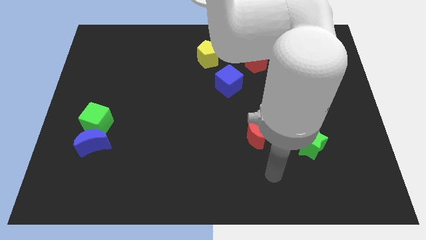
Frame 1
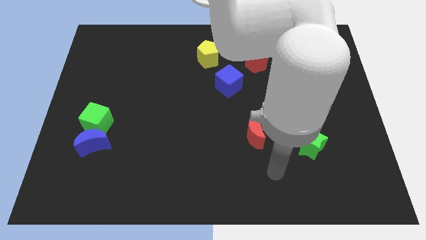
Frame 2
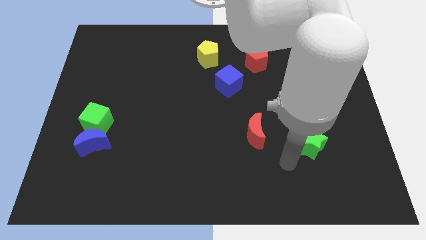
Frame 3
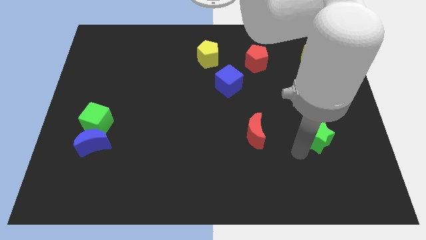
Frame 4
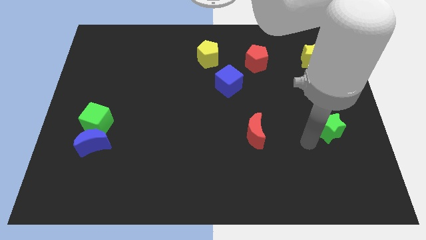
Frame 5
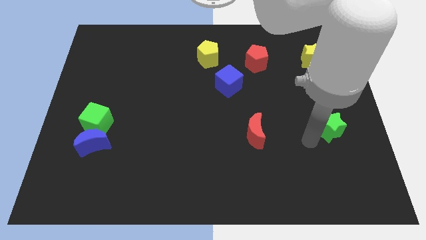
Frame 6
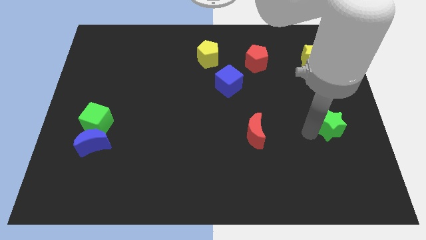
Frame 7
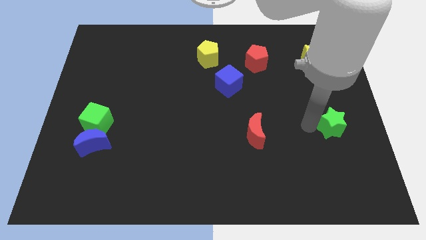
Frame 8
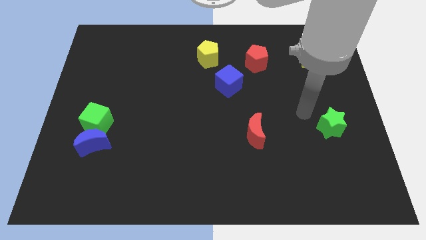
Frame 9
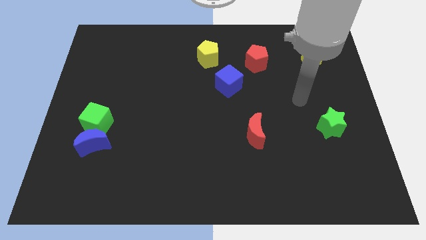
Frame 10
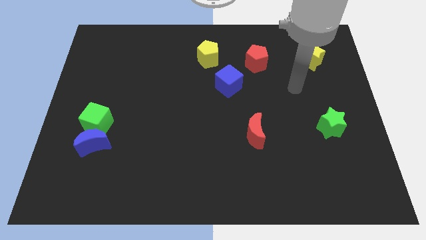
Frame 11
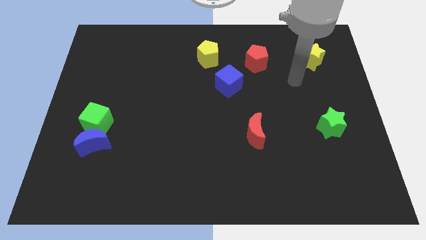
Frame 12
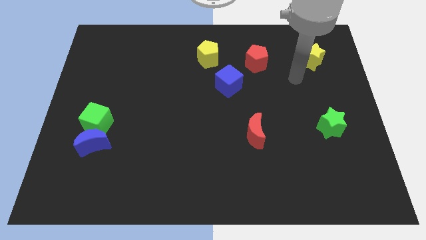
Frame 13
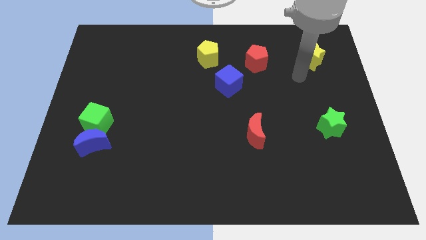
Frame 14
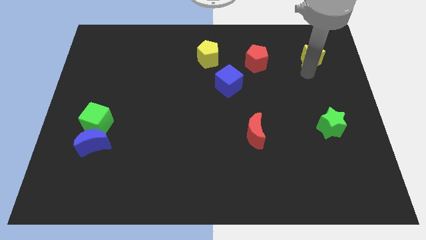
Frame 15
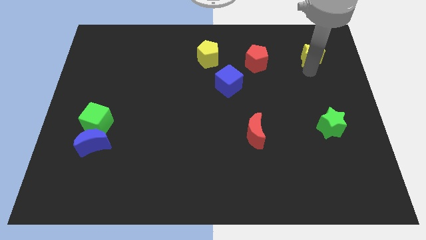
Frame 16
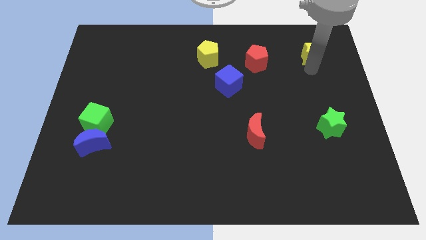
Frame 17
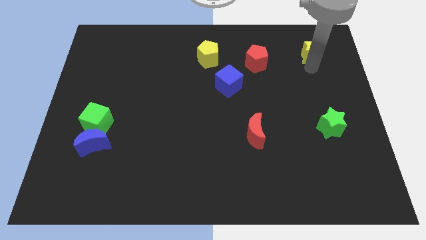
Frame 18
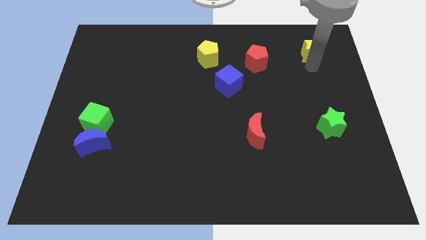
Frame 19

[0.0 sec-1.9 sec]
push the green star upwards of the board

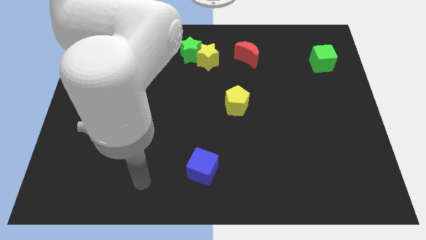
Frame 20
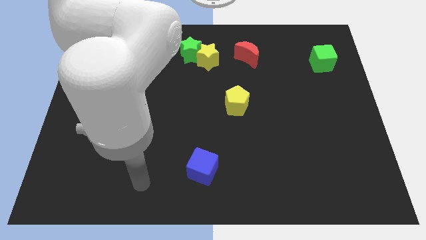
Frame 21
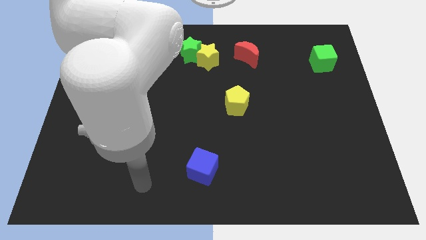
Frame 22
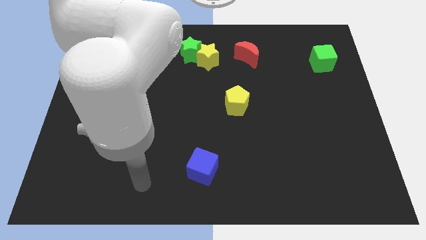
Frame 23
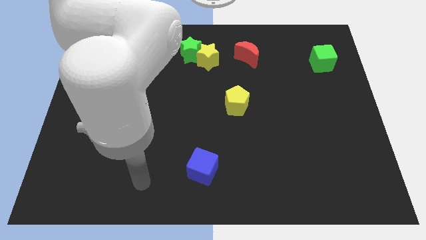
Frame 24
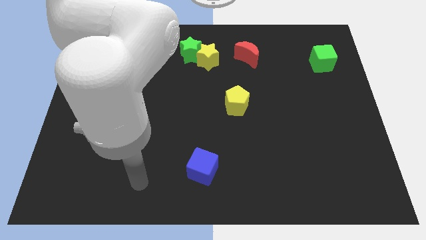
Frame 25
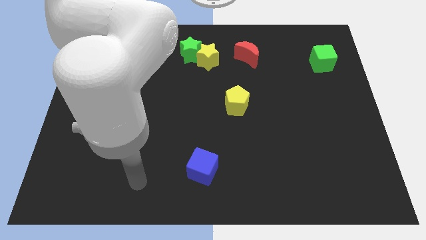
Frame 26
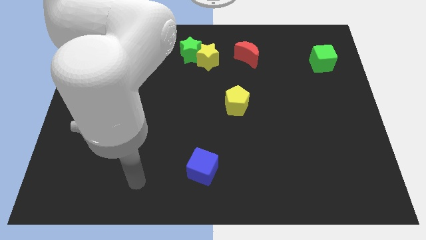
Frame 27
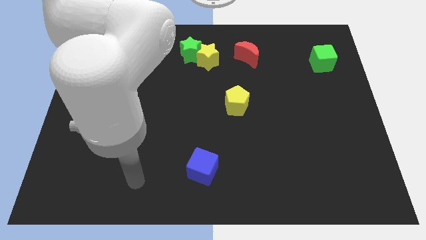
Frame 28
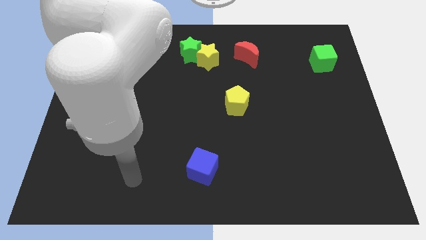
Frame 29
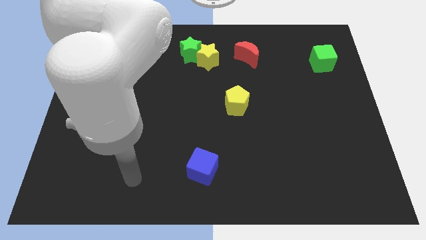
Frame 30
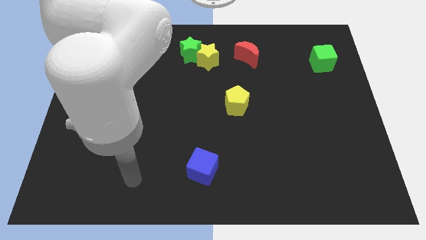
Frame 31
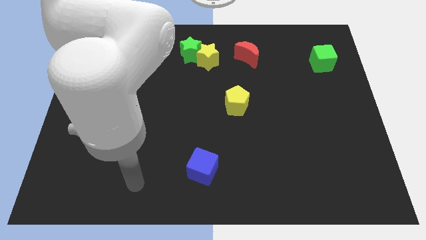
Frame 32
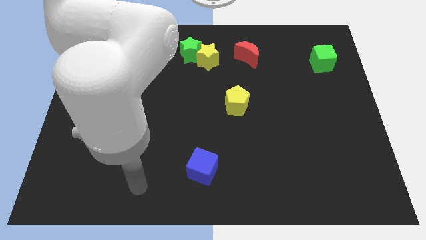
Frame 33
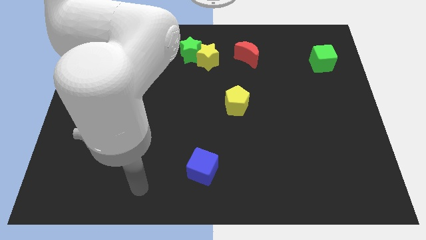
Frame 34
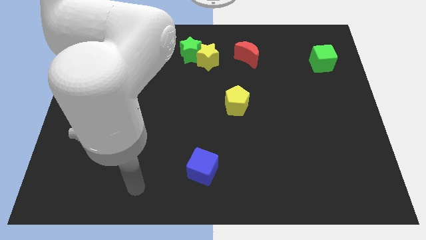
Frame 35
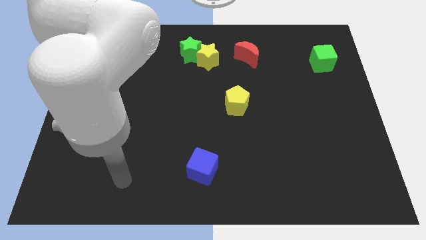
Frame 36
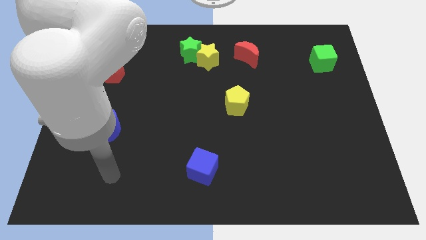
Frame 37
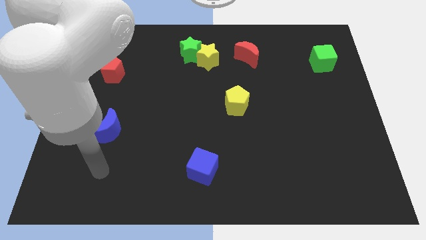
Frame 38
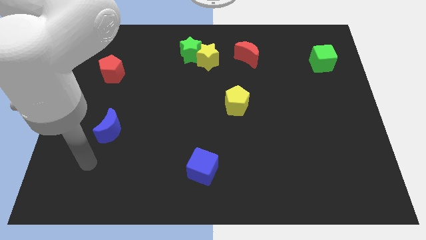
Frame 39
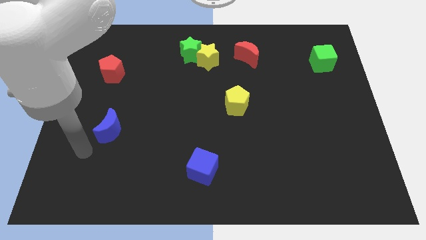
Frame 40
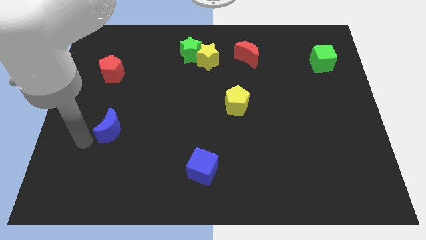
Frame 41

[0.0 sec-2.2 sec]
move your arm towards the left side of the board

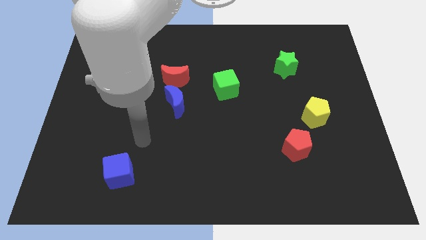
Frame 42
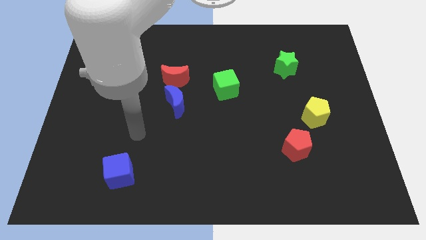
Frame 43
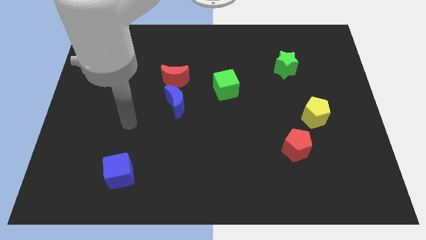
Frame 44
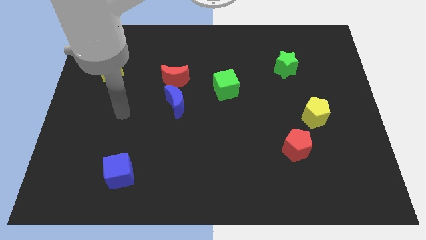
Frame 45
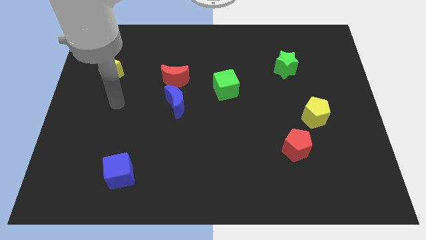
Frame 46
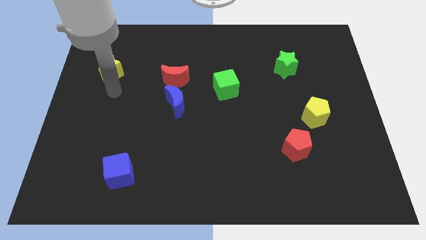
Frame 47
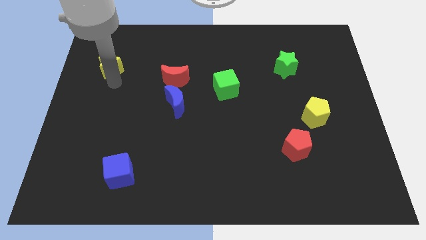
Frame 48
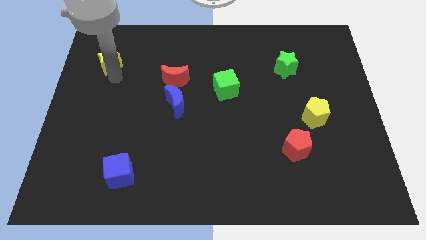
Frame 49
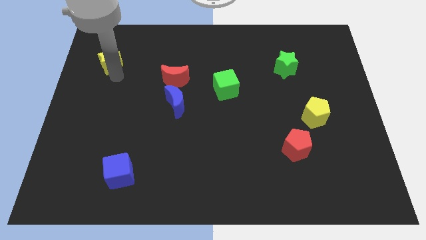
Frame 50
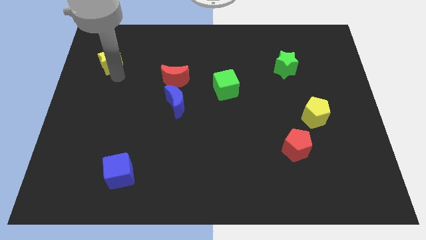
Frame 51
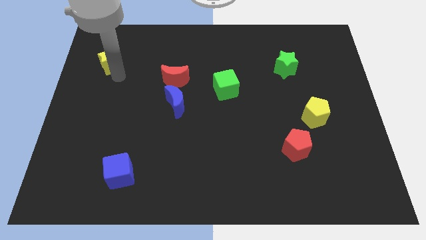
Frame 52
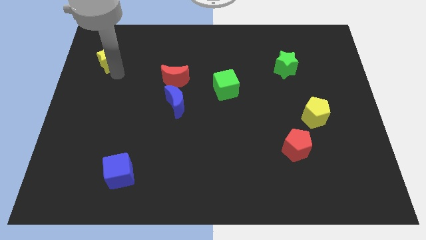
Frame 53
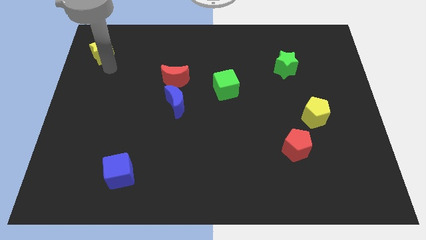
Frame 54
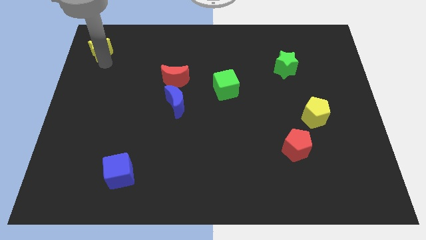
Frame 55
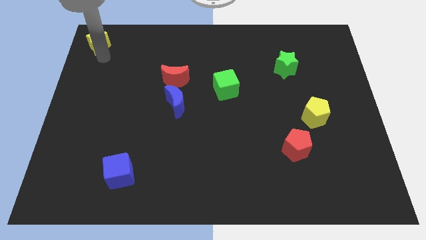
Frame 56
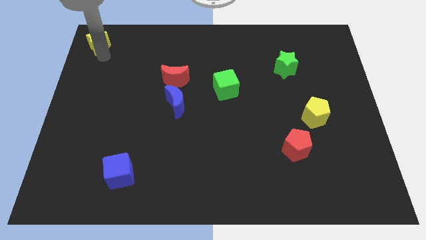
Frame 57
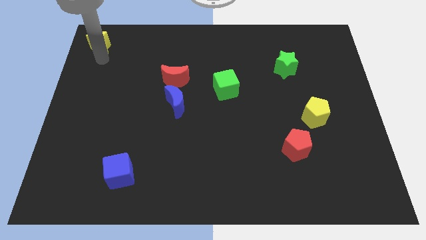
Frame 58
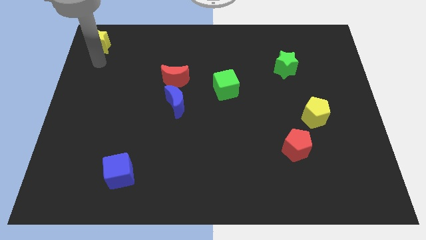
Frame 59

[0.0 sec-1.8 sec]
slide the yellow star to the top left of the board

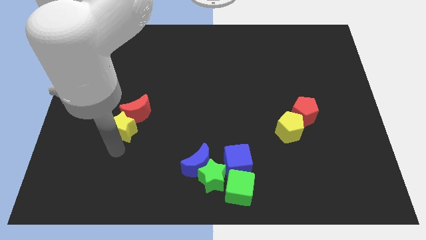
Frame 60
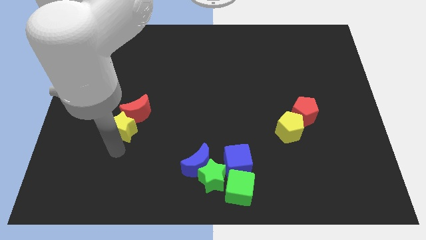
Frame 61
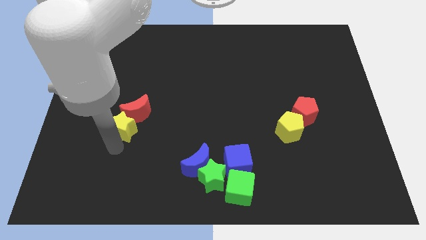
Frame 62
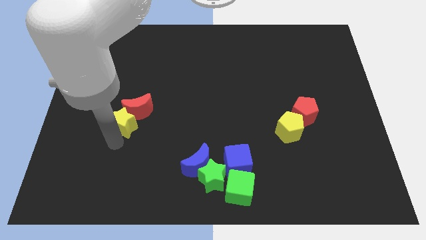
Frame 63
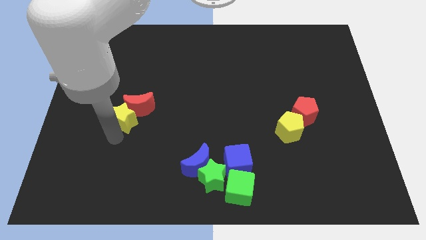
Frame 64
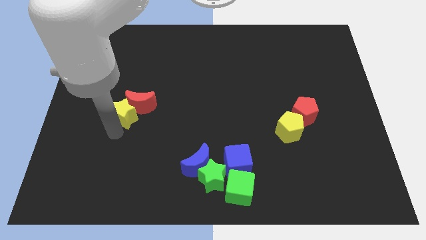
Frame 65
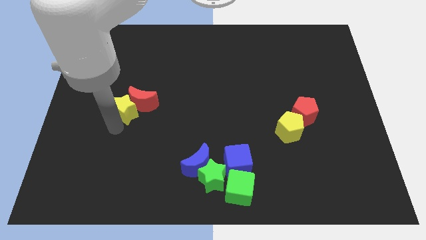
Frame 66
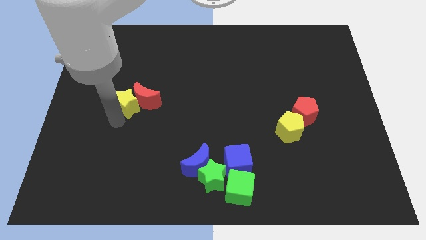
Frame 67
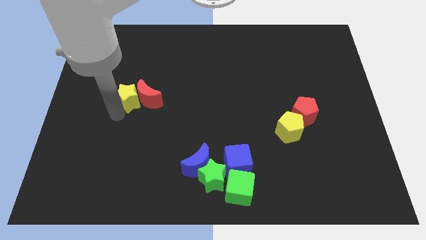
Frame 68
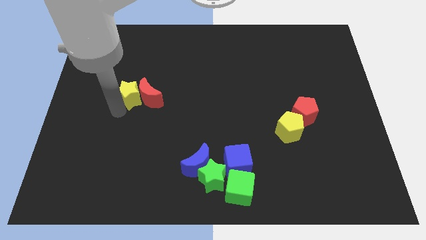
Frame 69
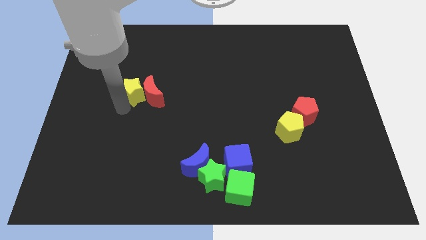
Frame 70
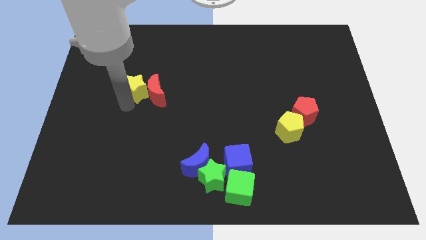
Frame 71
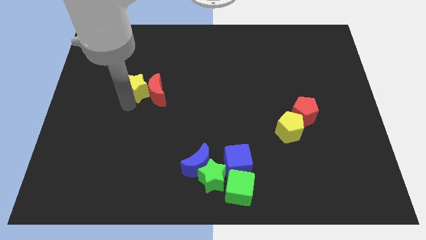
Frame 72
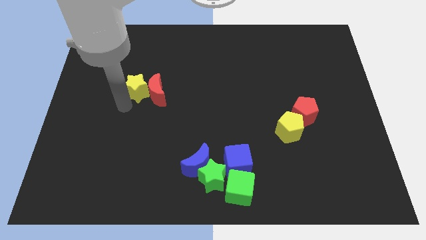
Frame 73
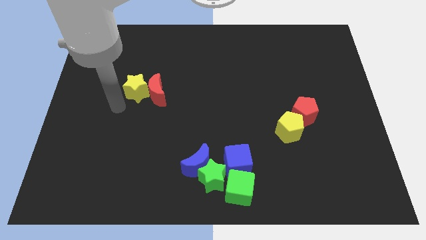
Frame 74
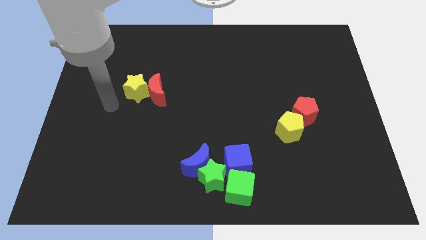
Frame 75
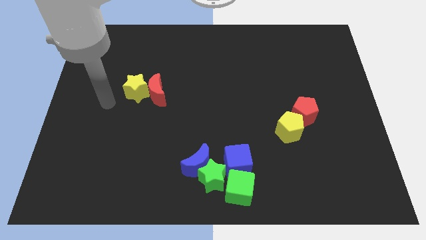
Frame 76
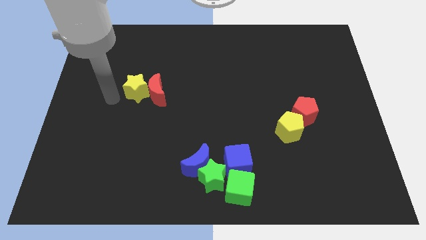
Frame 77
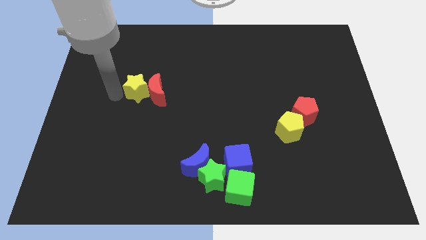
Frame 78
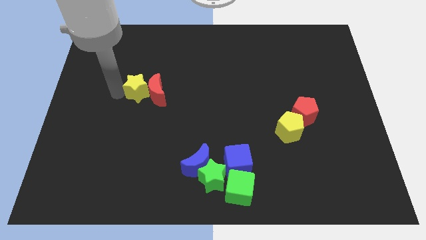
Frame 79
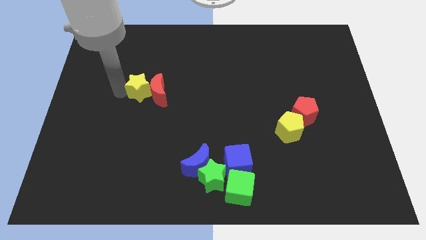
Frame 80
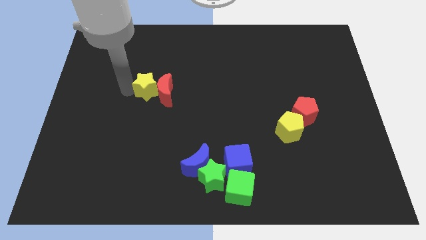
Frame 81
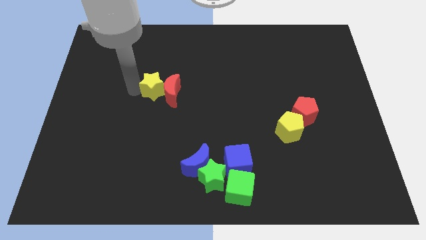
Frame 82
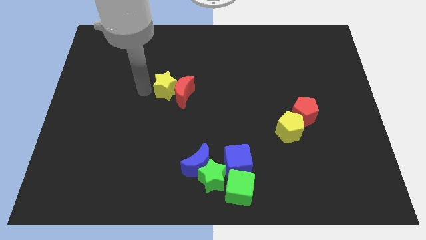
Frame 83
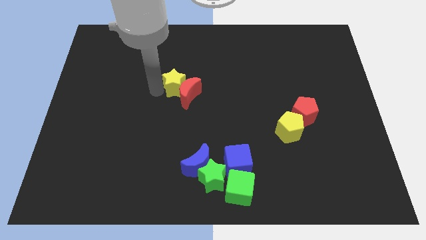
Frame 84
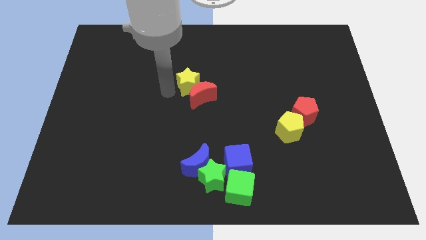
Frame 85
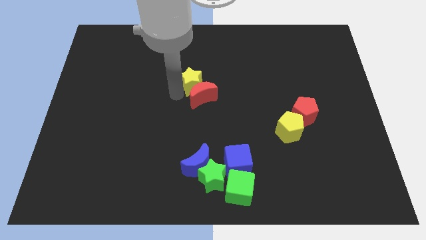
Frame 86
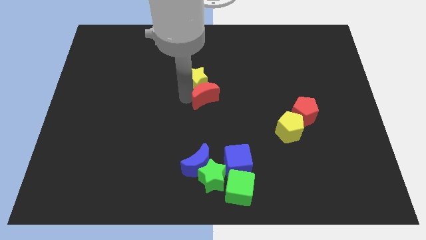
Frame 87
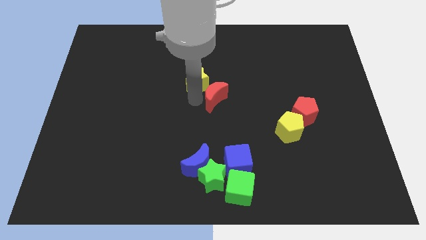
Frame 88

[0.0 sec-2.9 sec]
place yellow star and red moon at the center of the board

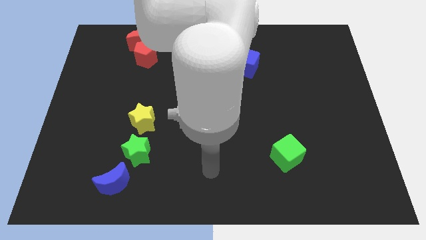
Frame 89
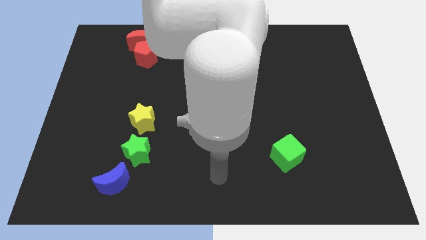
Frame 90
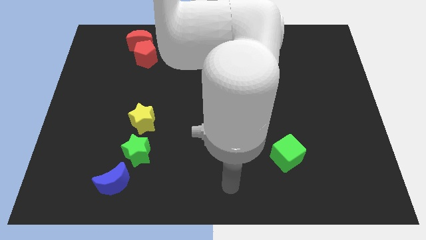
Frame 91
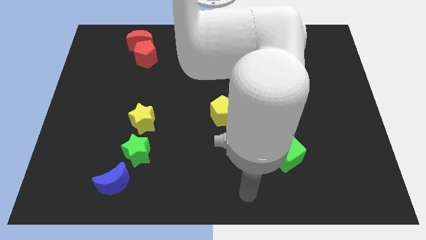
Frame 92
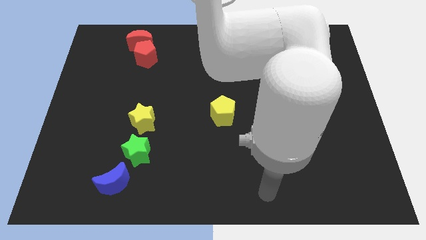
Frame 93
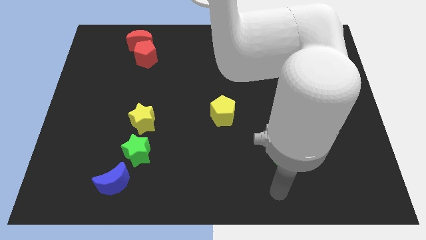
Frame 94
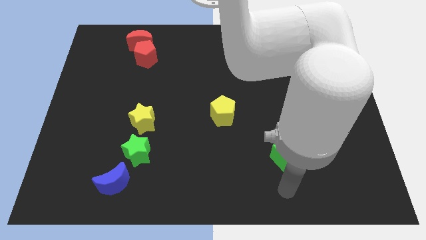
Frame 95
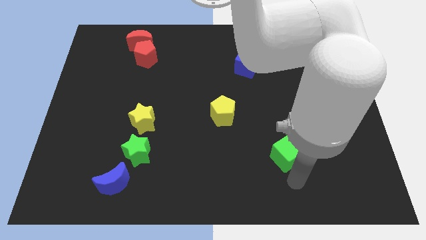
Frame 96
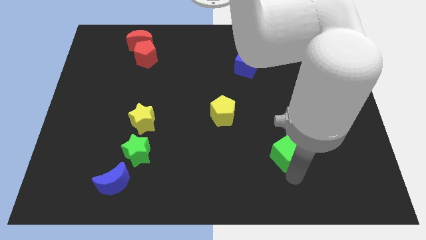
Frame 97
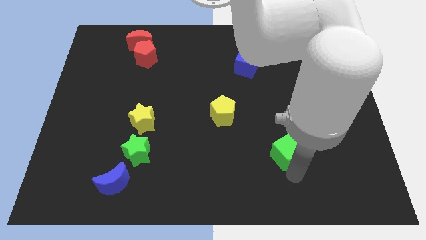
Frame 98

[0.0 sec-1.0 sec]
place the arm down to the green cube
